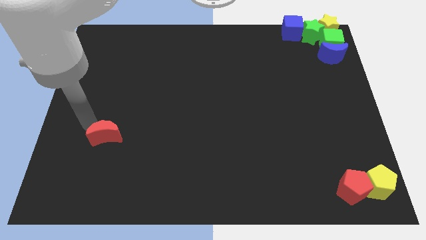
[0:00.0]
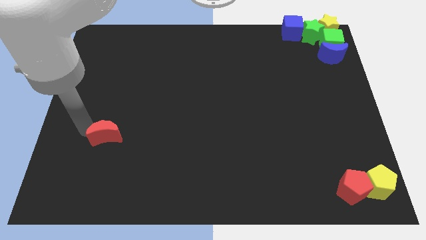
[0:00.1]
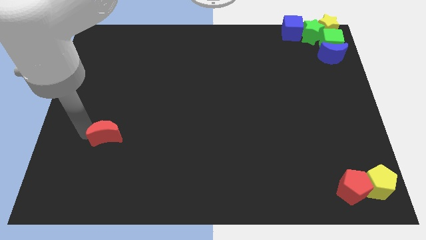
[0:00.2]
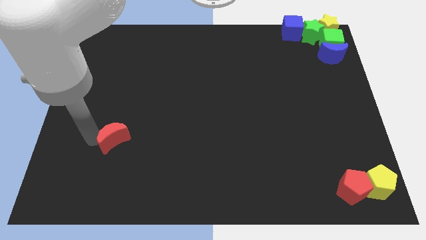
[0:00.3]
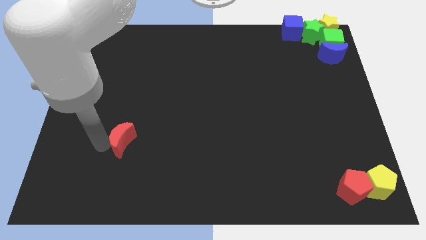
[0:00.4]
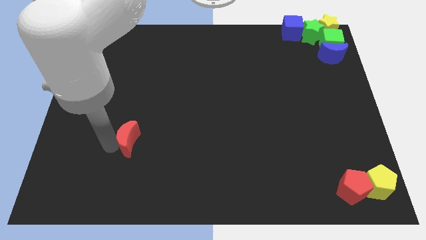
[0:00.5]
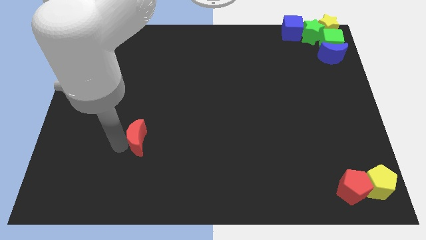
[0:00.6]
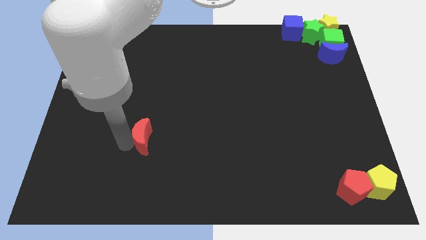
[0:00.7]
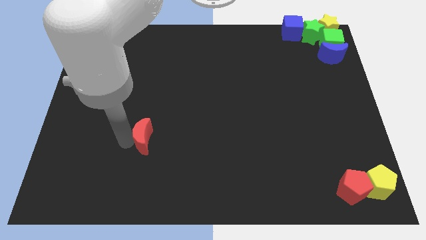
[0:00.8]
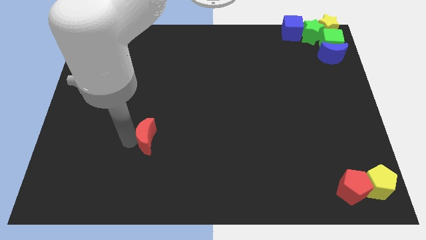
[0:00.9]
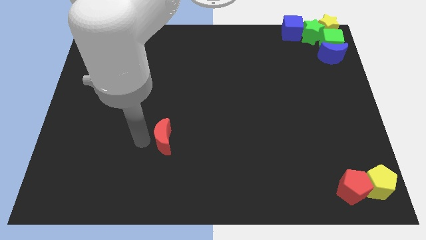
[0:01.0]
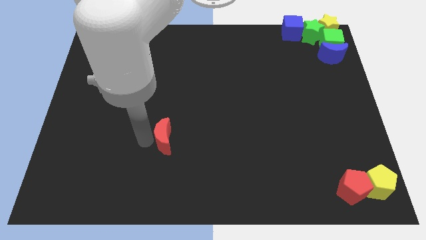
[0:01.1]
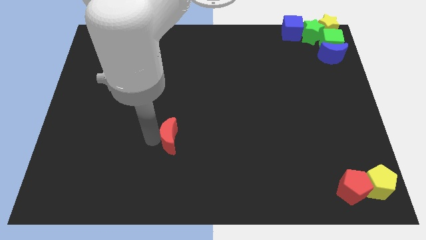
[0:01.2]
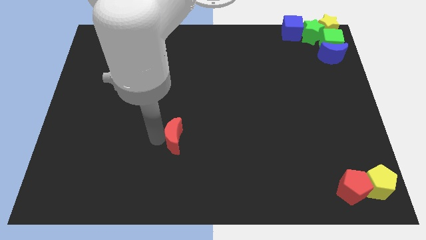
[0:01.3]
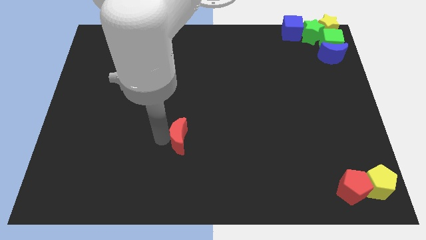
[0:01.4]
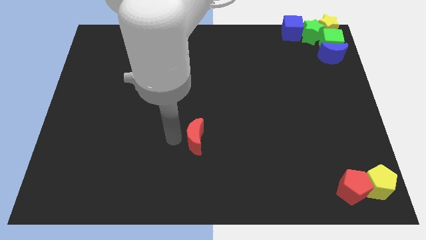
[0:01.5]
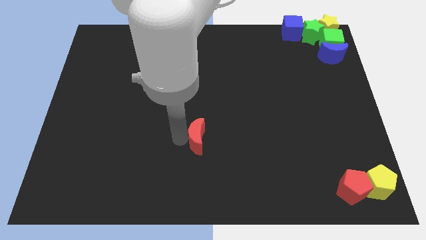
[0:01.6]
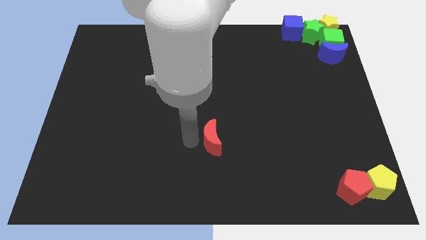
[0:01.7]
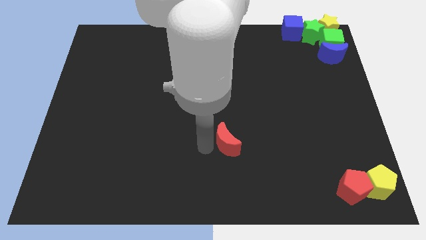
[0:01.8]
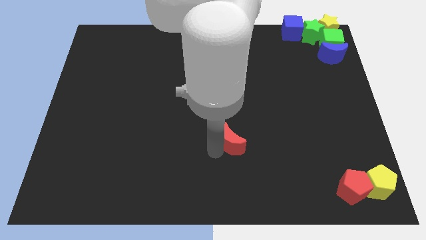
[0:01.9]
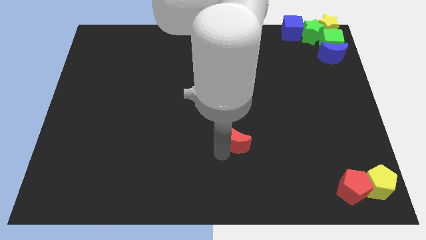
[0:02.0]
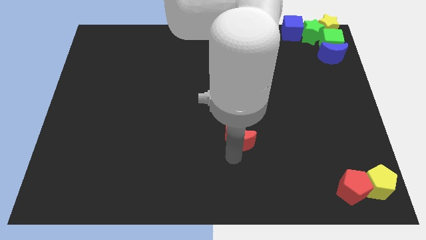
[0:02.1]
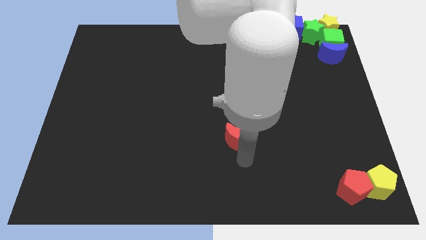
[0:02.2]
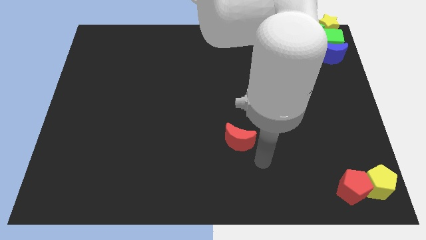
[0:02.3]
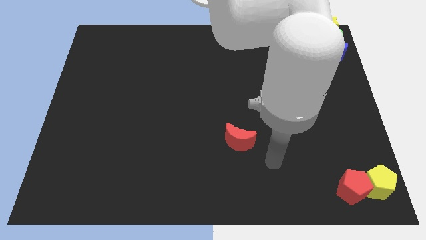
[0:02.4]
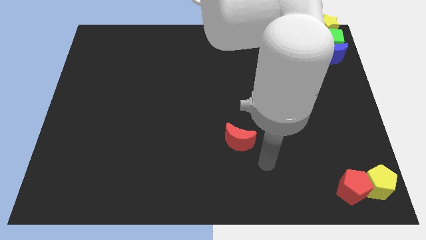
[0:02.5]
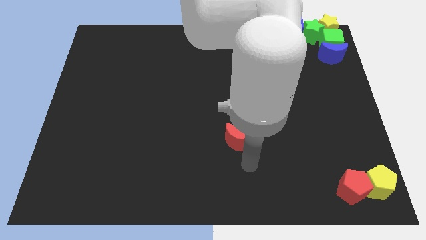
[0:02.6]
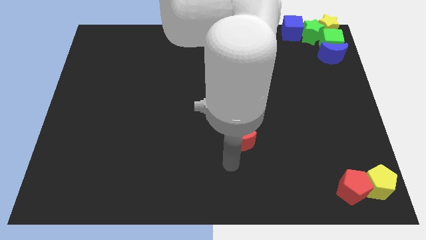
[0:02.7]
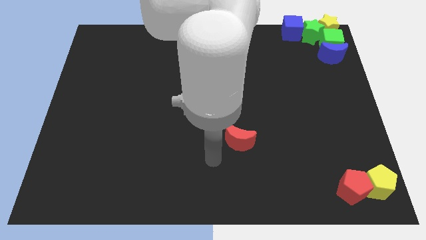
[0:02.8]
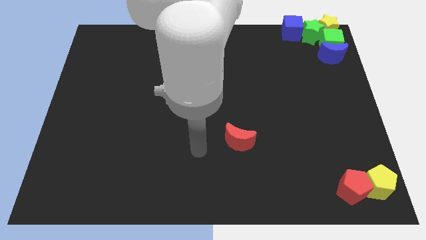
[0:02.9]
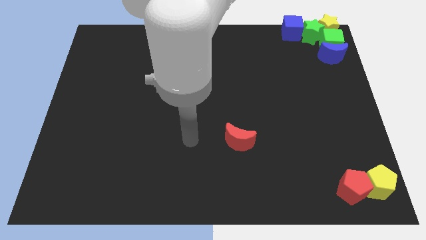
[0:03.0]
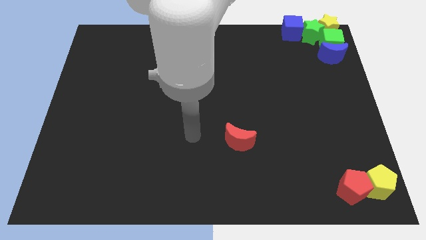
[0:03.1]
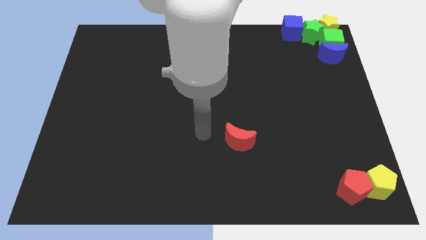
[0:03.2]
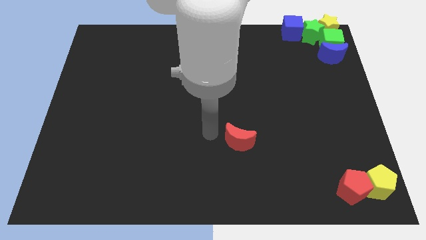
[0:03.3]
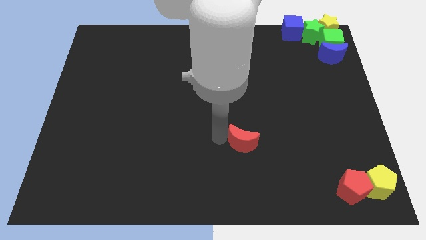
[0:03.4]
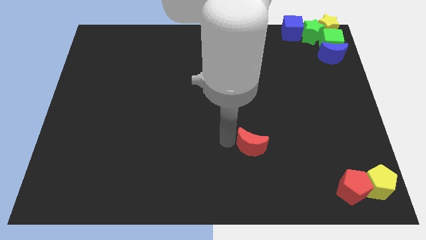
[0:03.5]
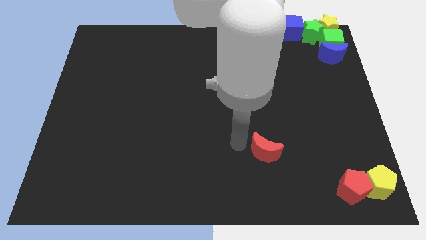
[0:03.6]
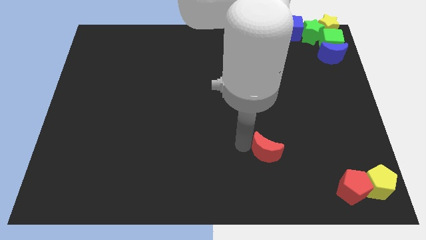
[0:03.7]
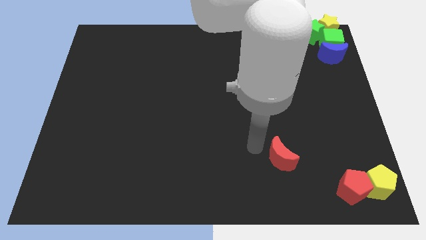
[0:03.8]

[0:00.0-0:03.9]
move the red crescent to the top left of the red pentagon

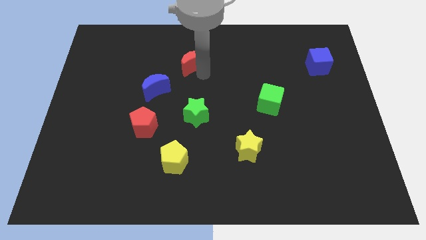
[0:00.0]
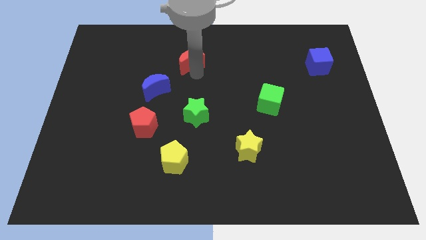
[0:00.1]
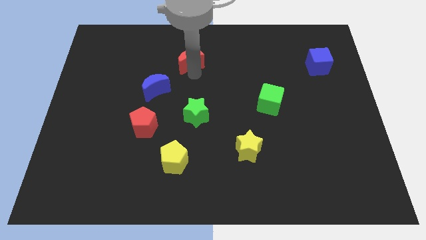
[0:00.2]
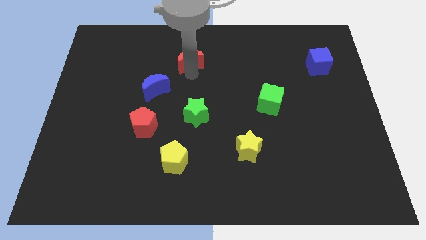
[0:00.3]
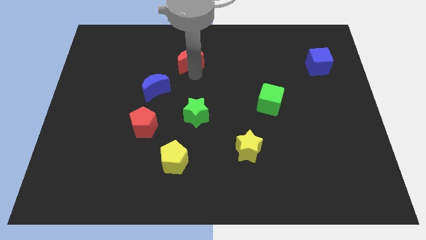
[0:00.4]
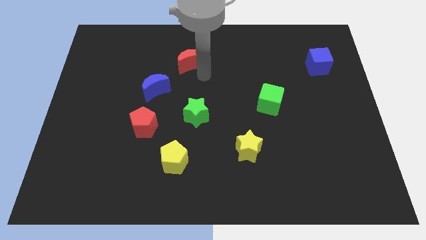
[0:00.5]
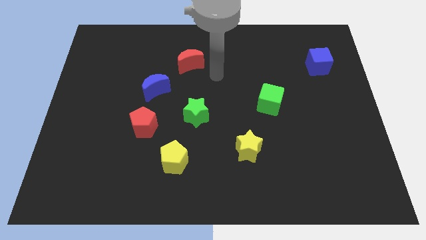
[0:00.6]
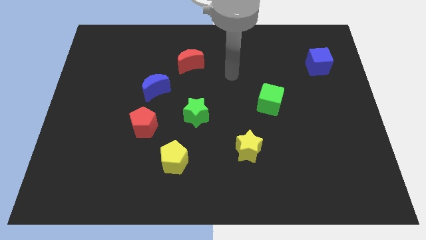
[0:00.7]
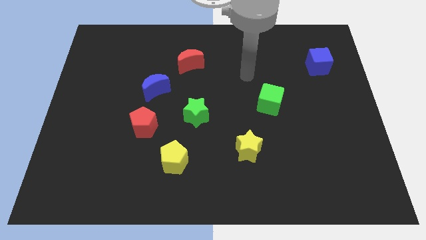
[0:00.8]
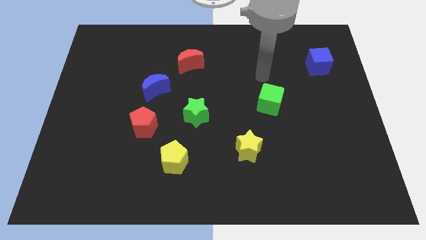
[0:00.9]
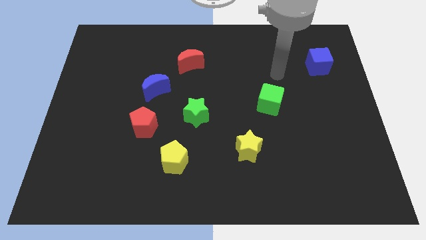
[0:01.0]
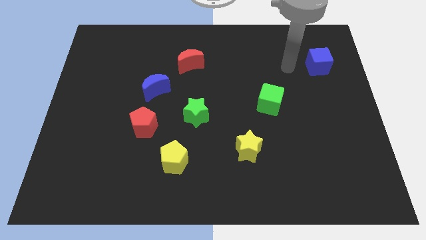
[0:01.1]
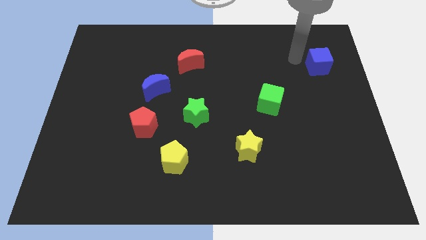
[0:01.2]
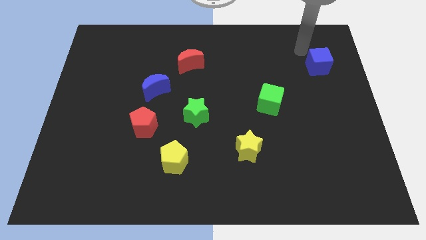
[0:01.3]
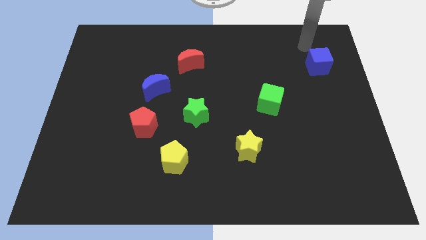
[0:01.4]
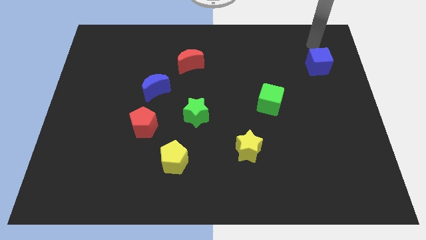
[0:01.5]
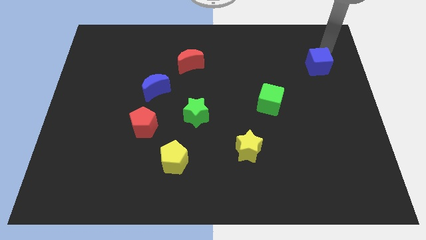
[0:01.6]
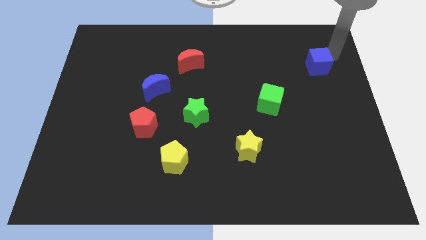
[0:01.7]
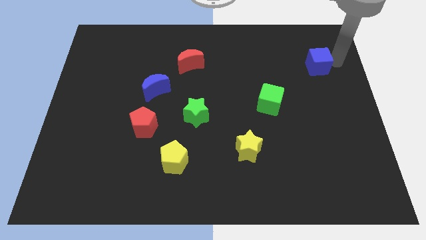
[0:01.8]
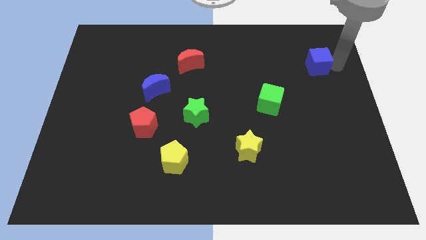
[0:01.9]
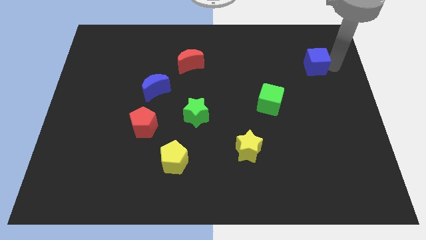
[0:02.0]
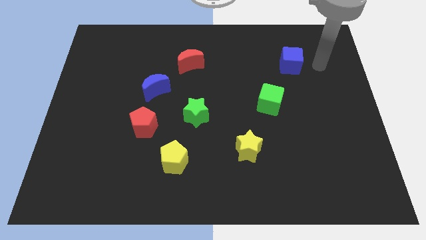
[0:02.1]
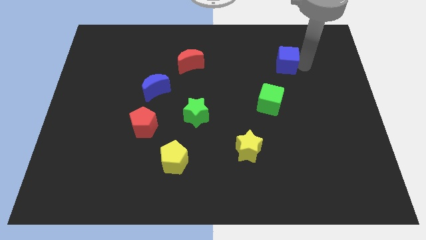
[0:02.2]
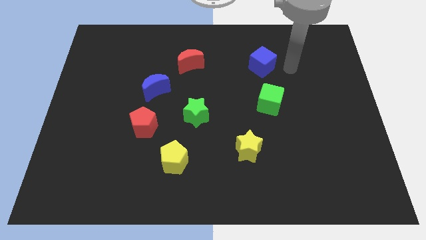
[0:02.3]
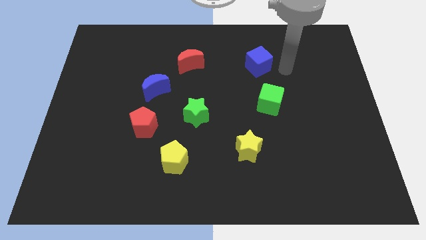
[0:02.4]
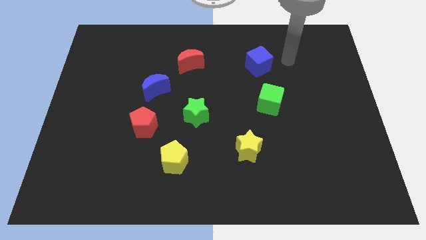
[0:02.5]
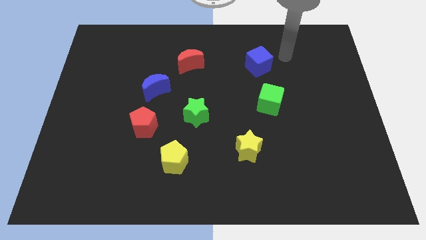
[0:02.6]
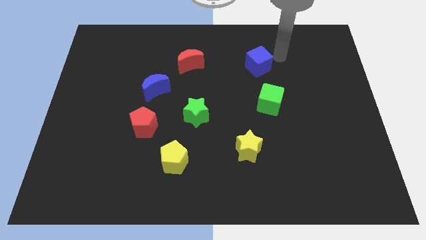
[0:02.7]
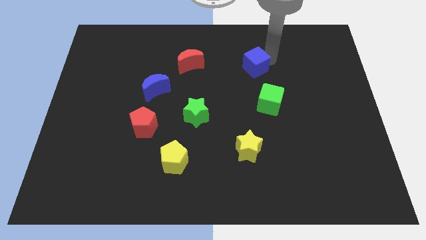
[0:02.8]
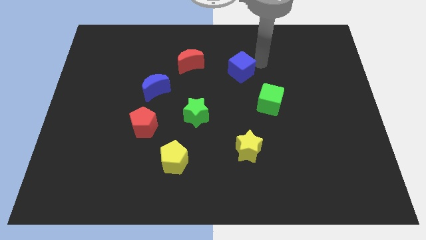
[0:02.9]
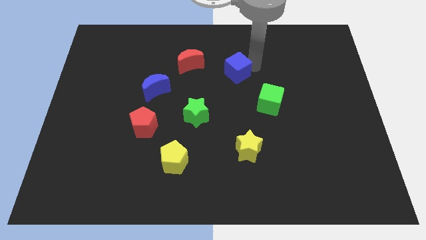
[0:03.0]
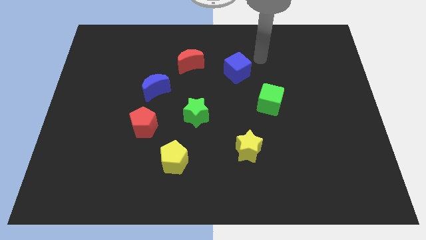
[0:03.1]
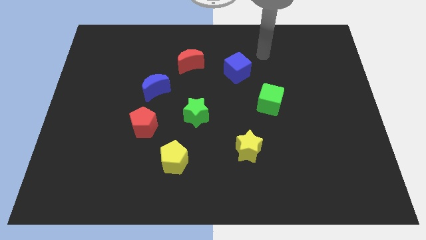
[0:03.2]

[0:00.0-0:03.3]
move the blue cube towards the center of the board

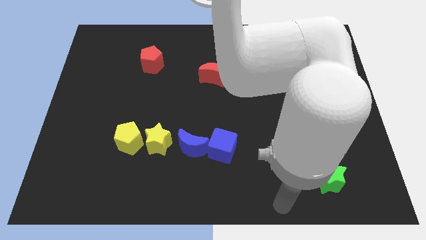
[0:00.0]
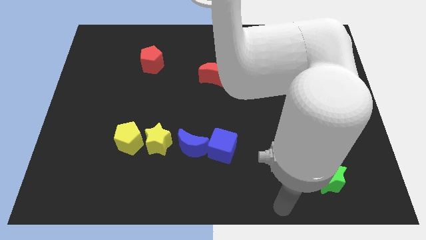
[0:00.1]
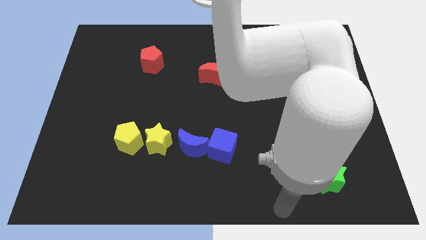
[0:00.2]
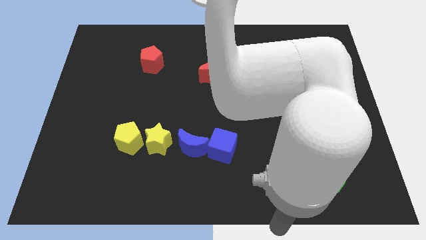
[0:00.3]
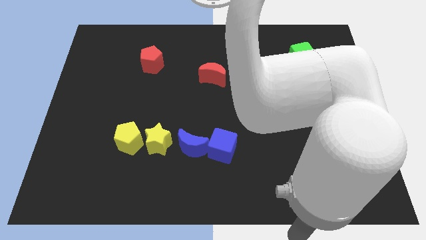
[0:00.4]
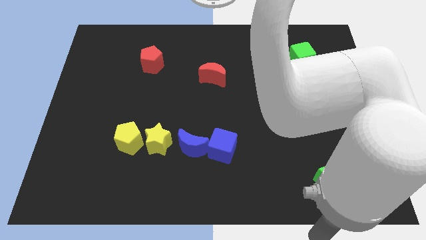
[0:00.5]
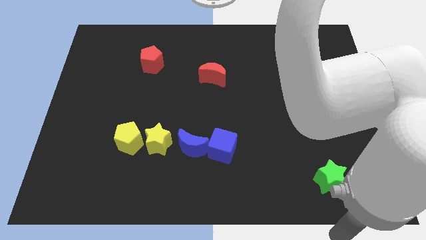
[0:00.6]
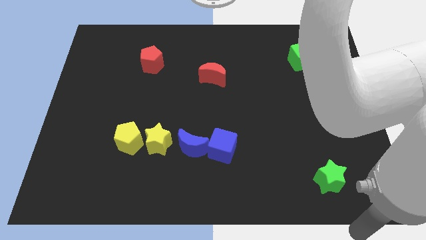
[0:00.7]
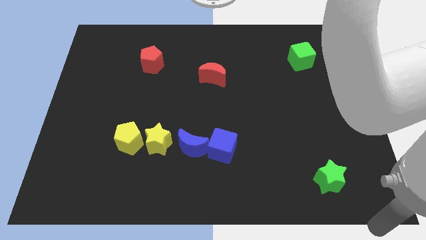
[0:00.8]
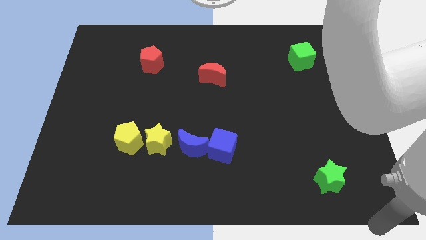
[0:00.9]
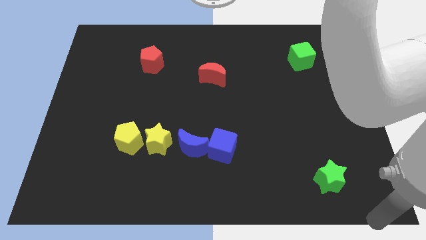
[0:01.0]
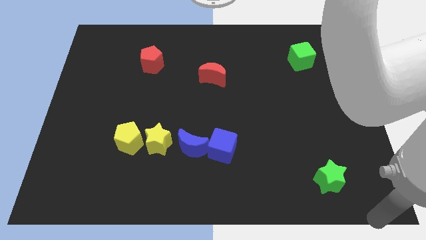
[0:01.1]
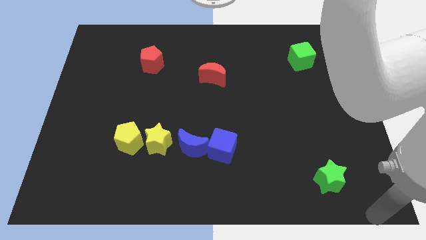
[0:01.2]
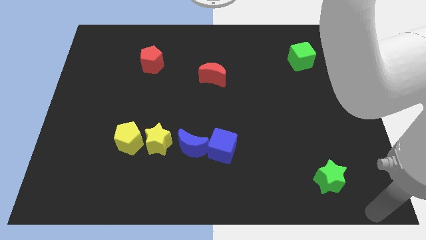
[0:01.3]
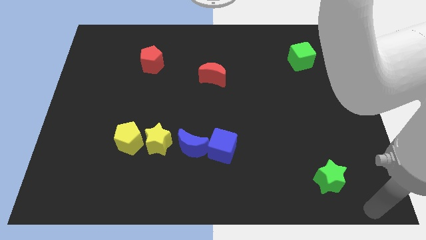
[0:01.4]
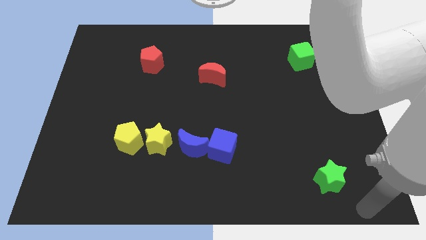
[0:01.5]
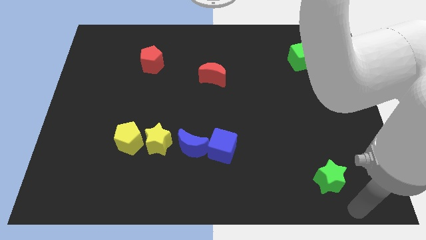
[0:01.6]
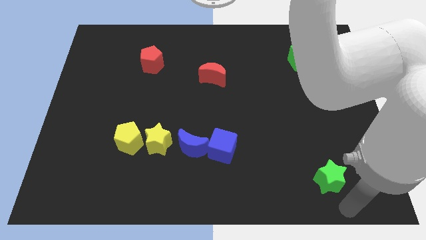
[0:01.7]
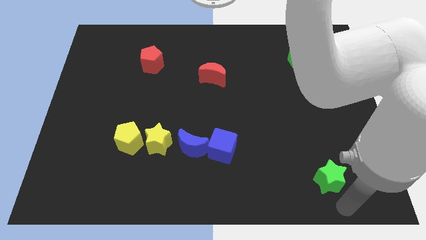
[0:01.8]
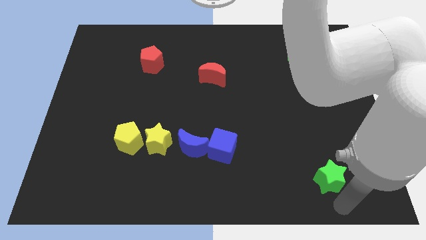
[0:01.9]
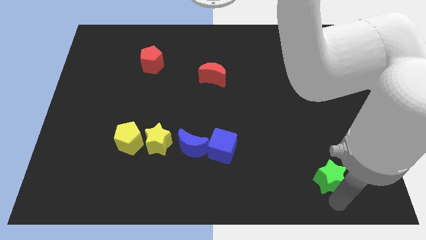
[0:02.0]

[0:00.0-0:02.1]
point your arm at the bottom of the green star
